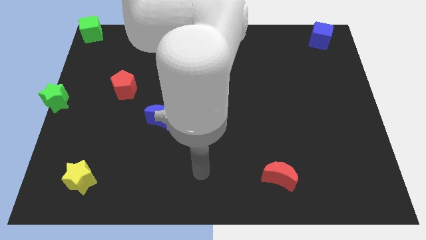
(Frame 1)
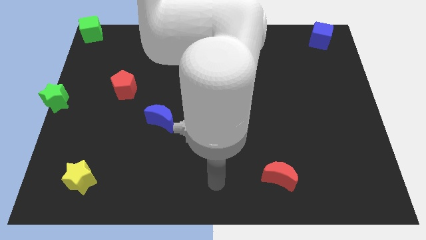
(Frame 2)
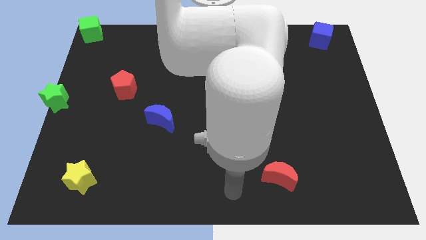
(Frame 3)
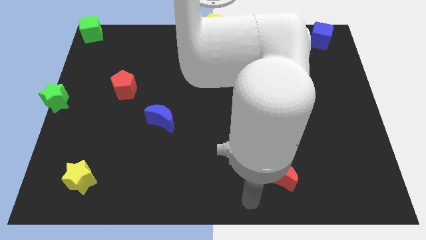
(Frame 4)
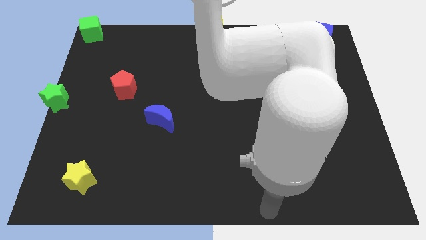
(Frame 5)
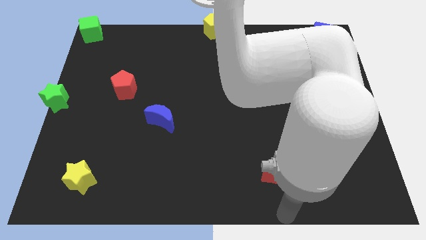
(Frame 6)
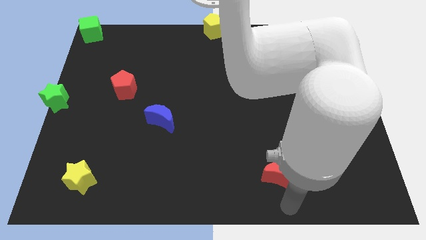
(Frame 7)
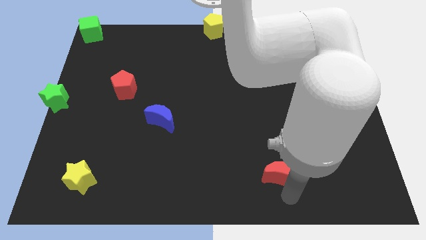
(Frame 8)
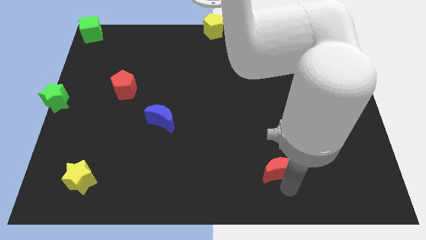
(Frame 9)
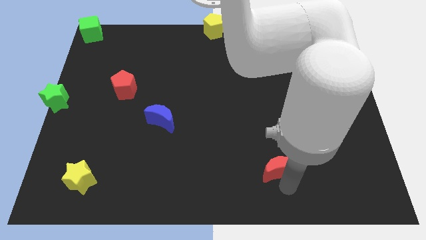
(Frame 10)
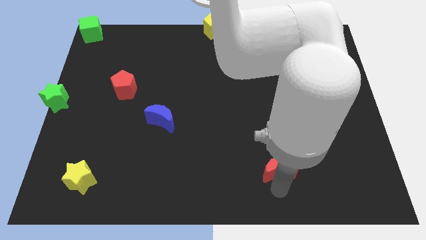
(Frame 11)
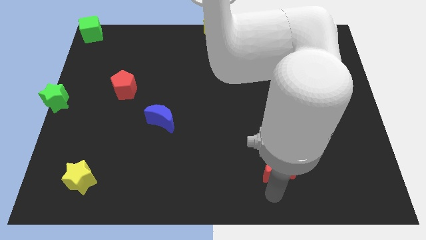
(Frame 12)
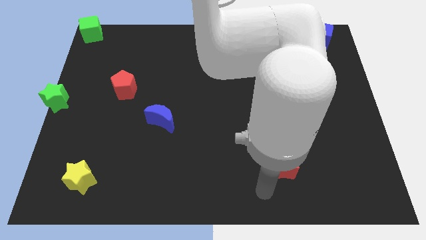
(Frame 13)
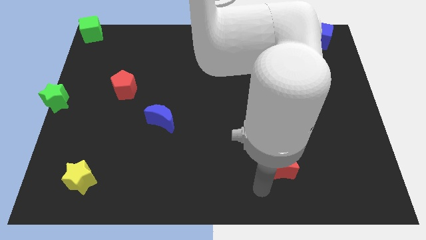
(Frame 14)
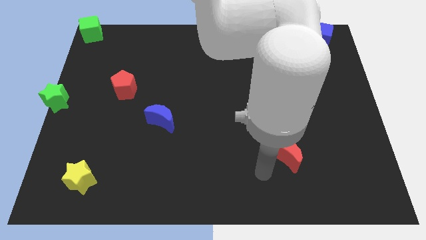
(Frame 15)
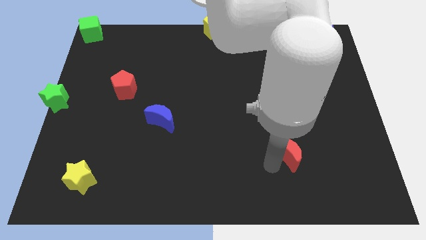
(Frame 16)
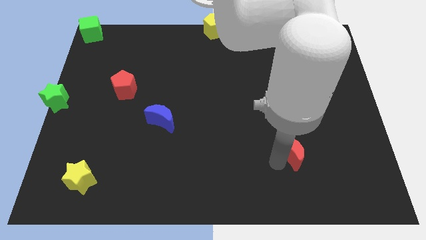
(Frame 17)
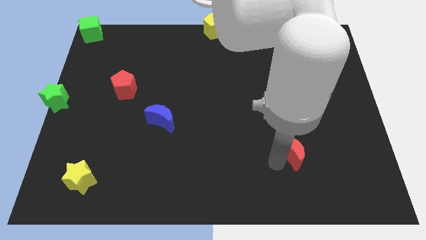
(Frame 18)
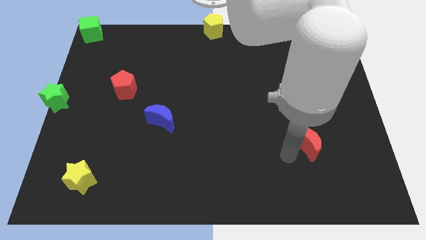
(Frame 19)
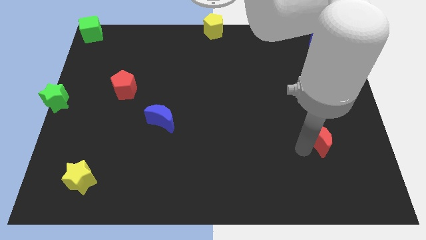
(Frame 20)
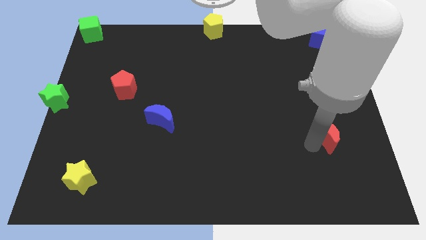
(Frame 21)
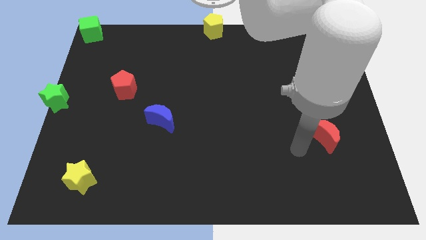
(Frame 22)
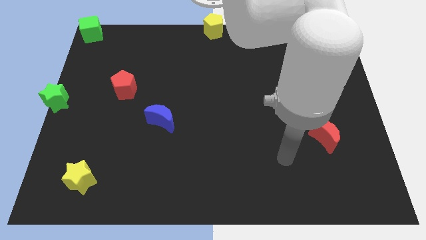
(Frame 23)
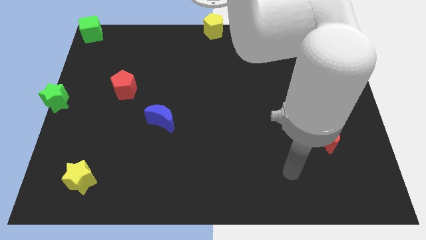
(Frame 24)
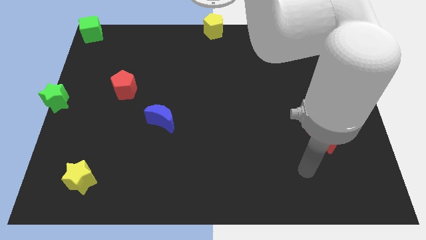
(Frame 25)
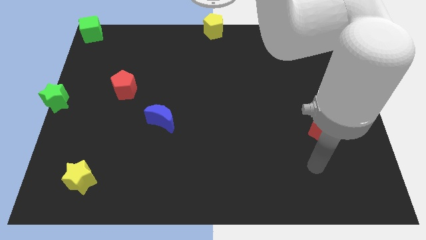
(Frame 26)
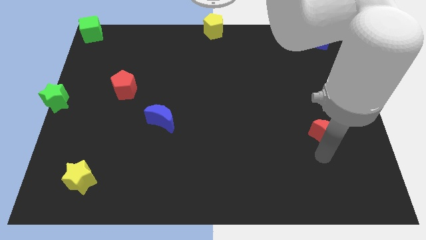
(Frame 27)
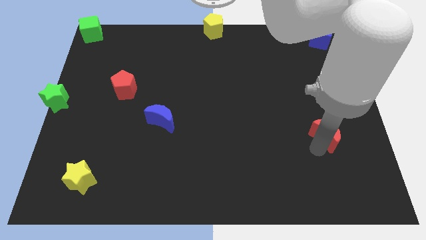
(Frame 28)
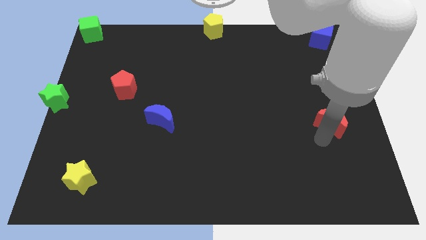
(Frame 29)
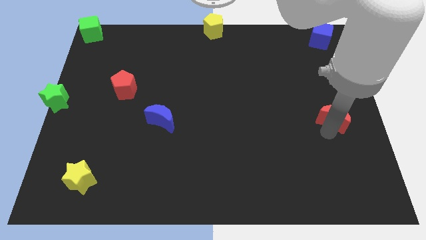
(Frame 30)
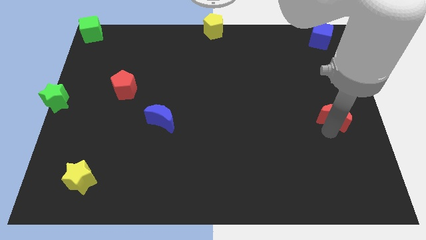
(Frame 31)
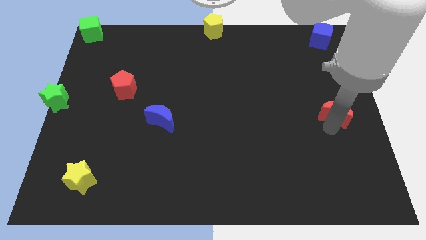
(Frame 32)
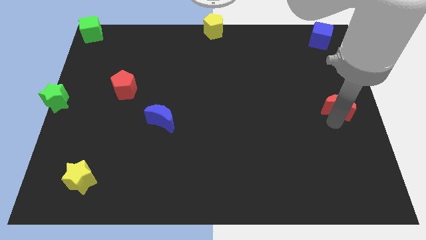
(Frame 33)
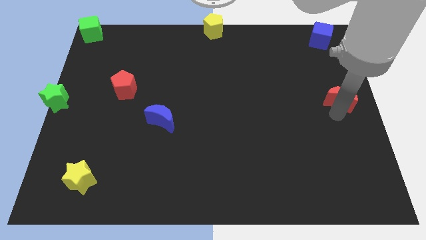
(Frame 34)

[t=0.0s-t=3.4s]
push the red moon to the center right

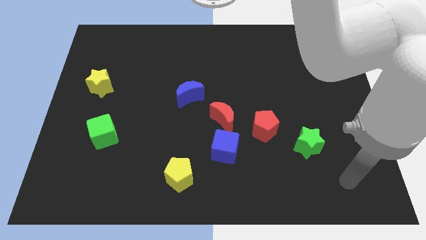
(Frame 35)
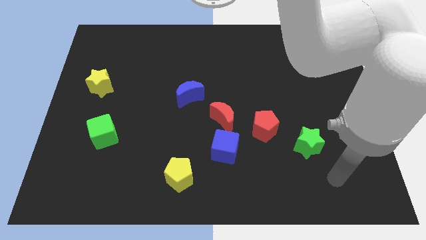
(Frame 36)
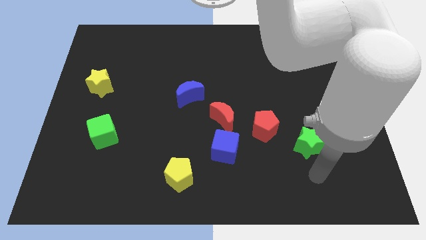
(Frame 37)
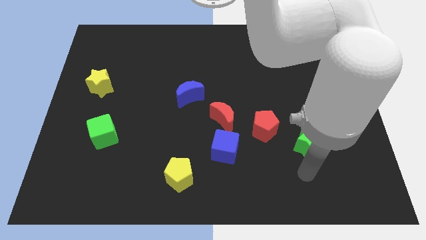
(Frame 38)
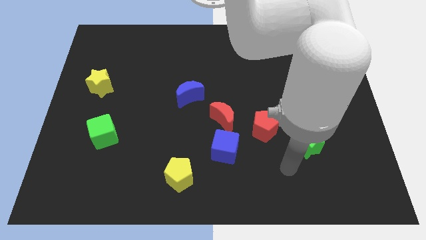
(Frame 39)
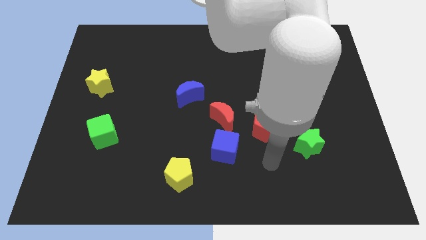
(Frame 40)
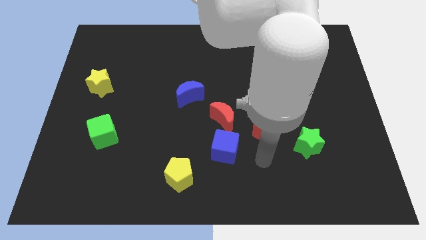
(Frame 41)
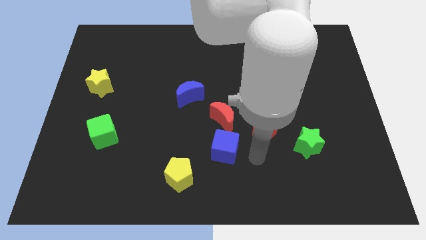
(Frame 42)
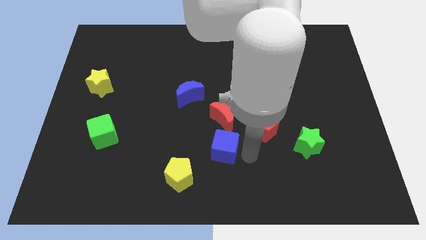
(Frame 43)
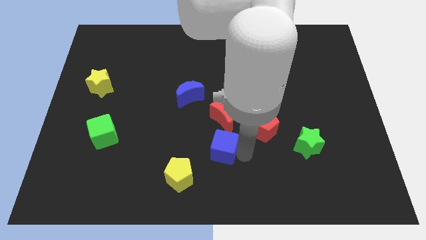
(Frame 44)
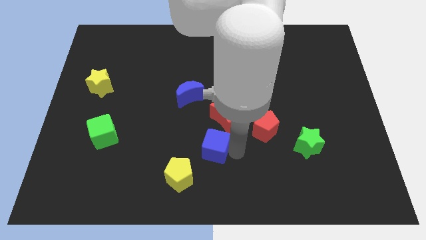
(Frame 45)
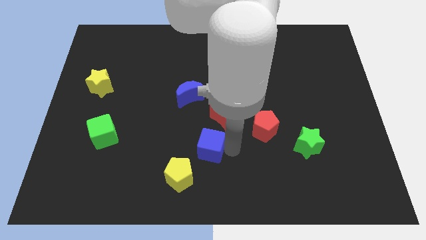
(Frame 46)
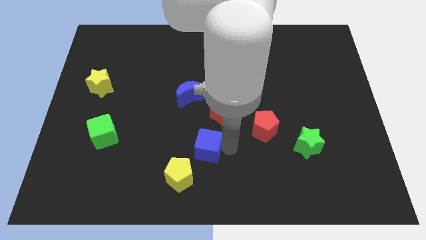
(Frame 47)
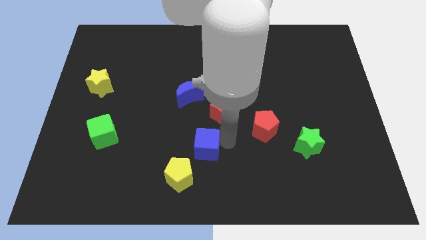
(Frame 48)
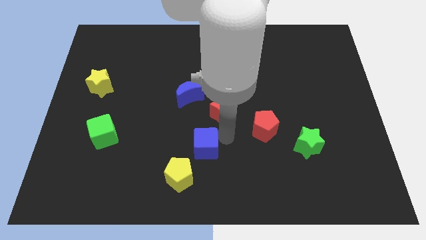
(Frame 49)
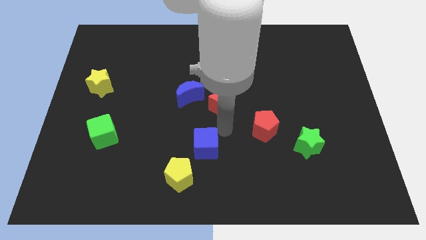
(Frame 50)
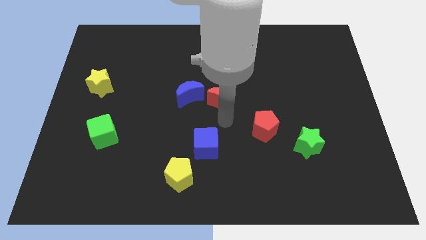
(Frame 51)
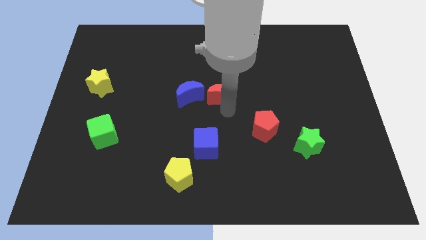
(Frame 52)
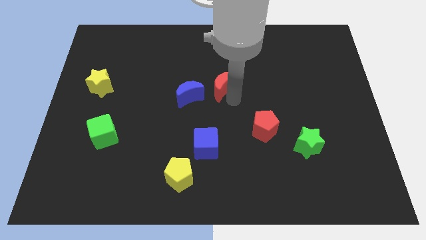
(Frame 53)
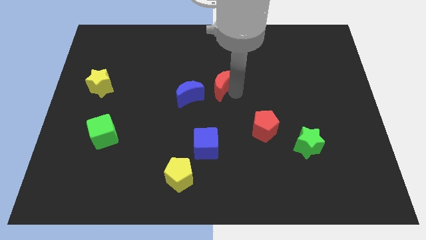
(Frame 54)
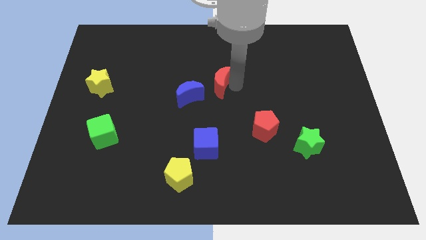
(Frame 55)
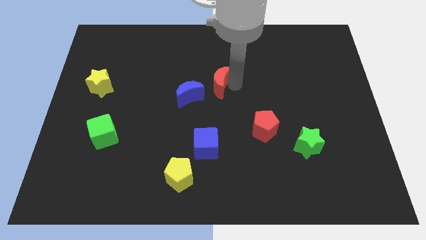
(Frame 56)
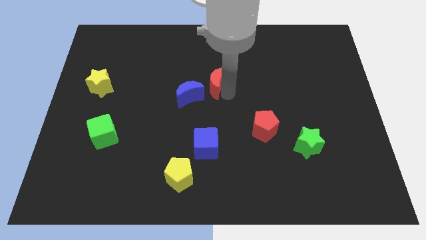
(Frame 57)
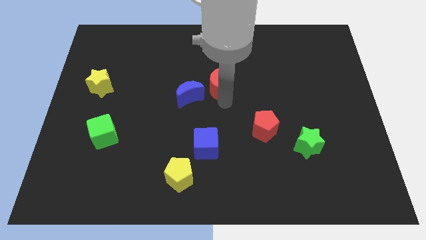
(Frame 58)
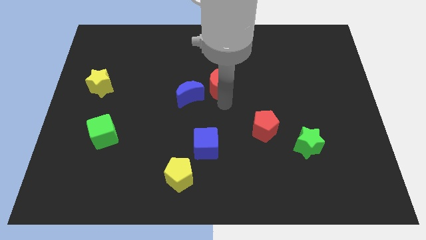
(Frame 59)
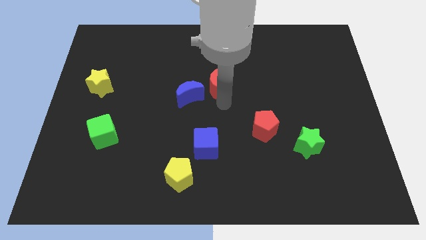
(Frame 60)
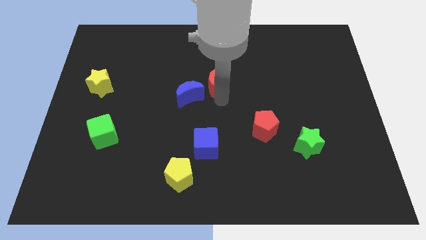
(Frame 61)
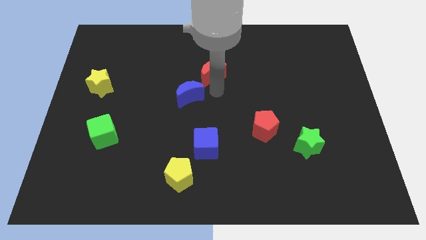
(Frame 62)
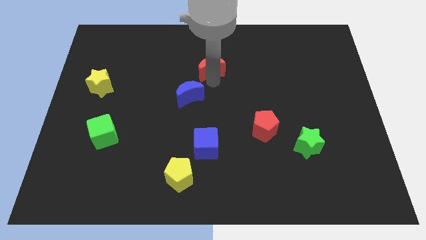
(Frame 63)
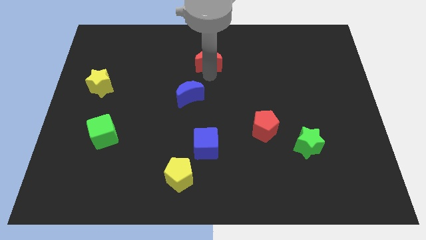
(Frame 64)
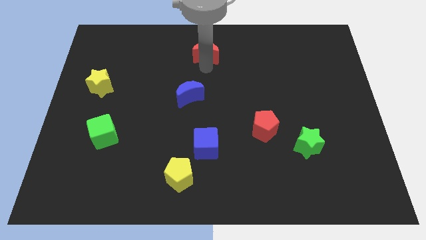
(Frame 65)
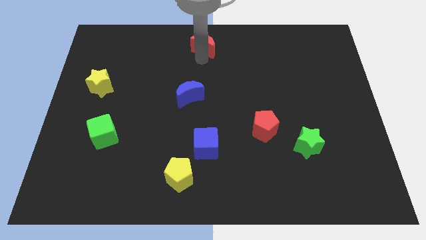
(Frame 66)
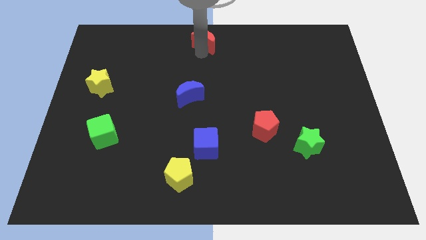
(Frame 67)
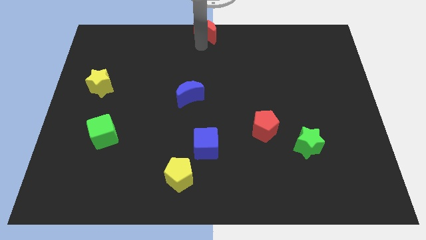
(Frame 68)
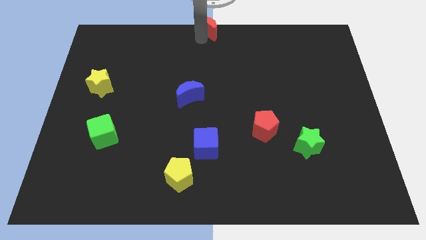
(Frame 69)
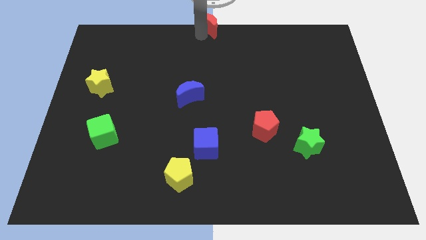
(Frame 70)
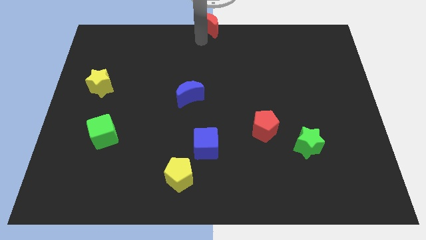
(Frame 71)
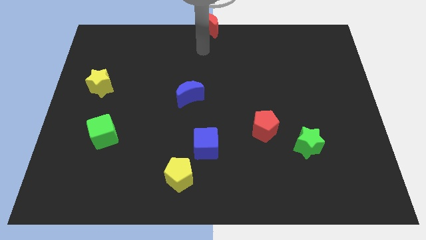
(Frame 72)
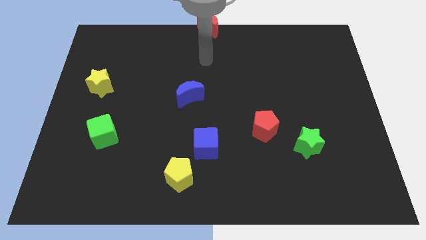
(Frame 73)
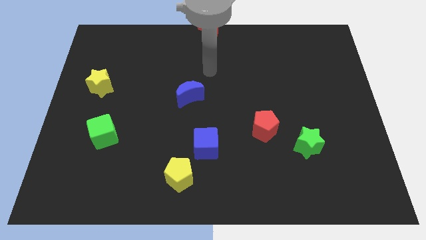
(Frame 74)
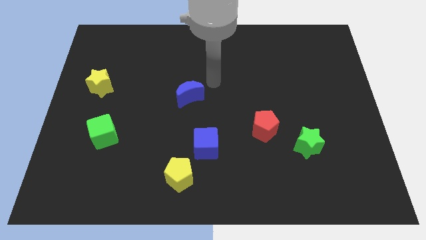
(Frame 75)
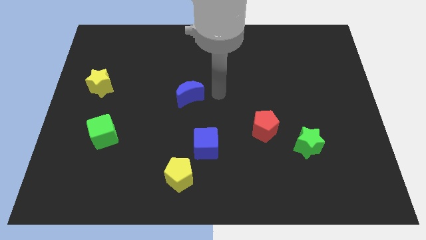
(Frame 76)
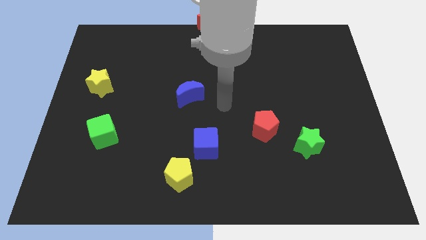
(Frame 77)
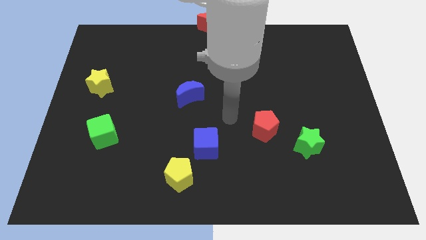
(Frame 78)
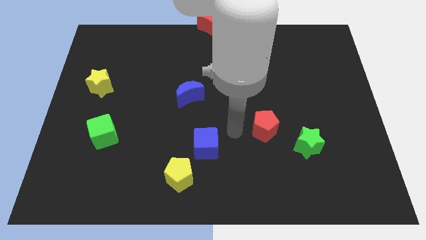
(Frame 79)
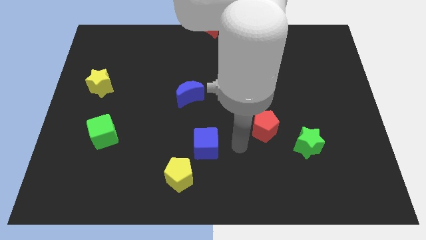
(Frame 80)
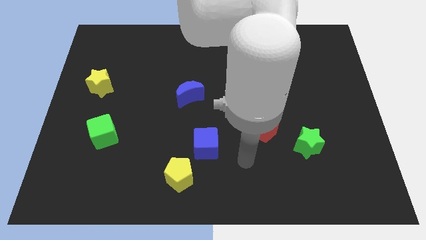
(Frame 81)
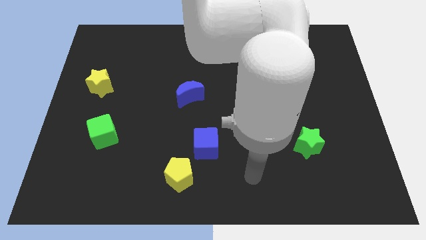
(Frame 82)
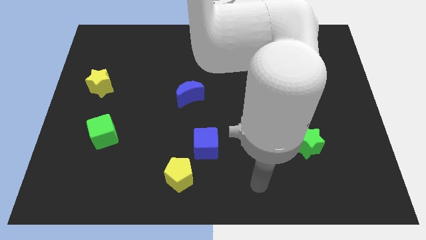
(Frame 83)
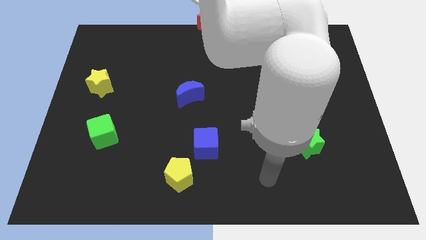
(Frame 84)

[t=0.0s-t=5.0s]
push the red crescent towards the top center of the board

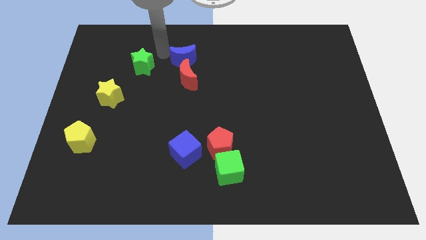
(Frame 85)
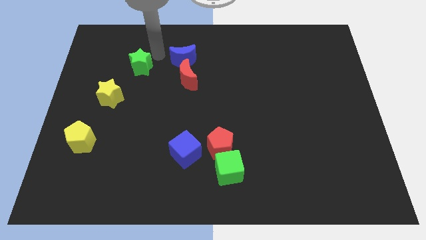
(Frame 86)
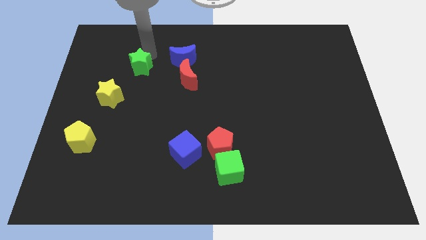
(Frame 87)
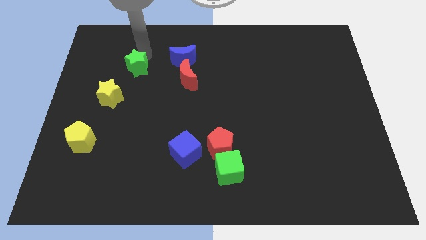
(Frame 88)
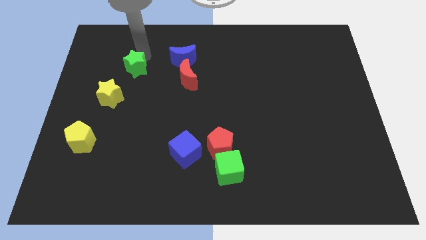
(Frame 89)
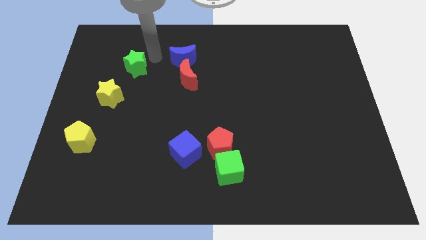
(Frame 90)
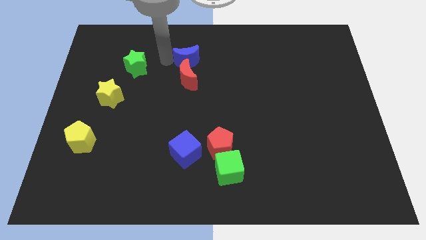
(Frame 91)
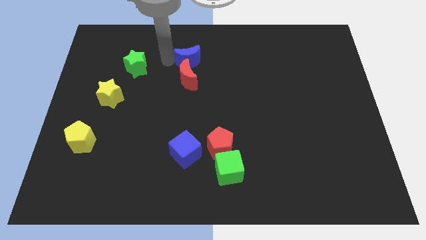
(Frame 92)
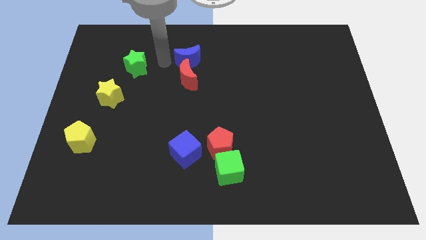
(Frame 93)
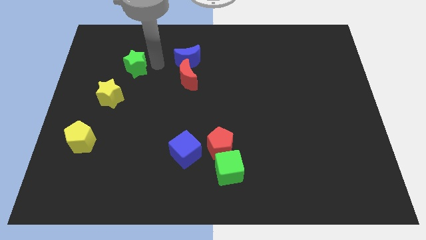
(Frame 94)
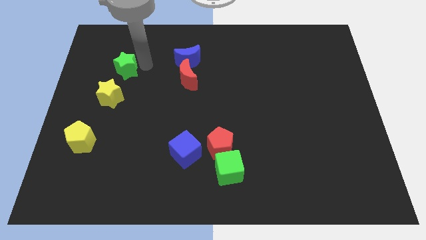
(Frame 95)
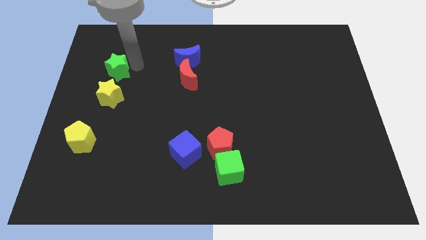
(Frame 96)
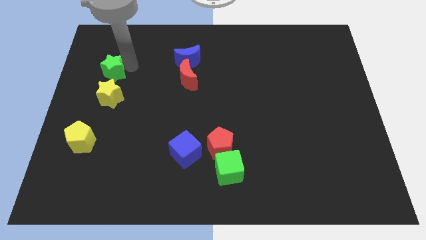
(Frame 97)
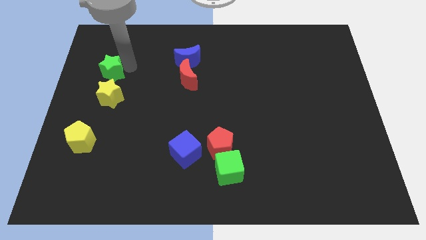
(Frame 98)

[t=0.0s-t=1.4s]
move the green star above the yellow star
